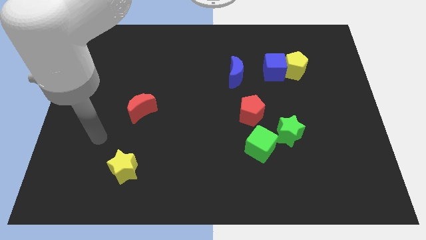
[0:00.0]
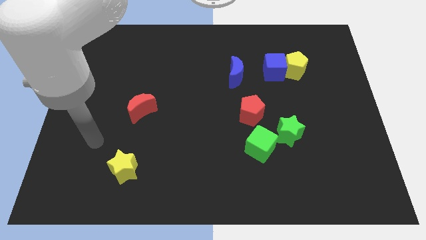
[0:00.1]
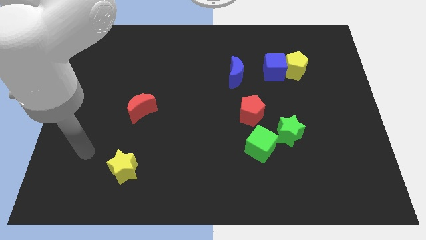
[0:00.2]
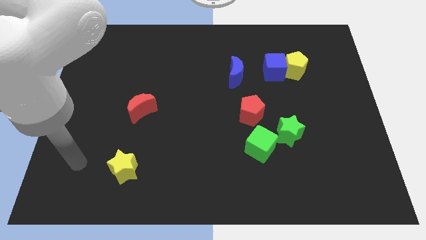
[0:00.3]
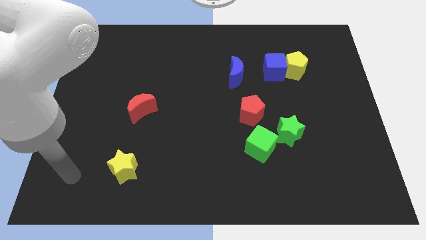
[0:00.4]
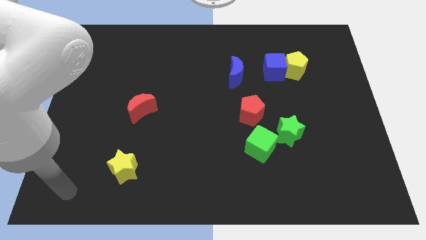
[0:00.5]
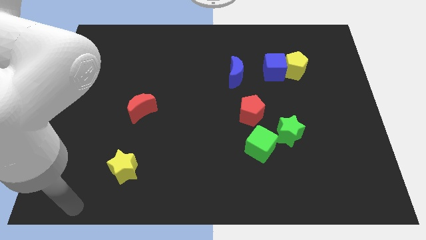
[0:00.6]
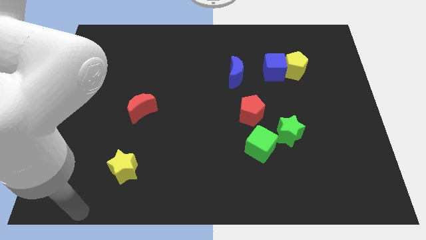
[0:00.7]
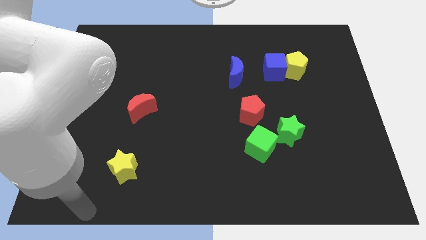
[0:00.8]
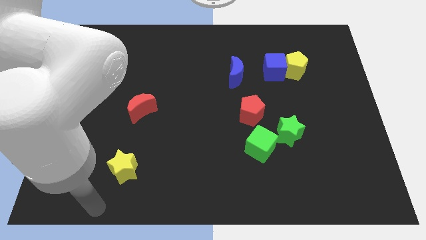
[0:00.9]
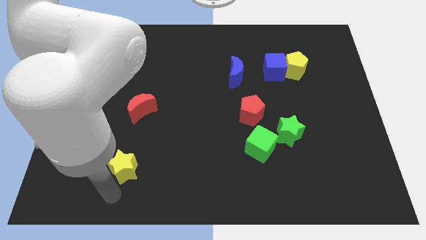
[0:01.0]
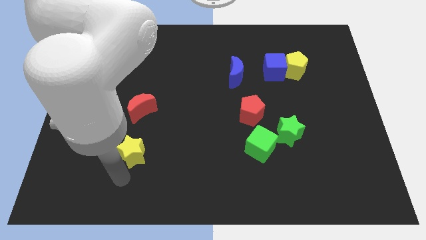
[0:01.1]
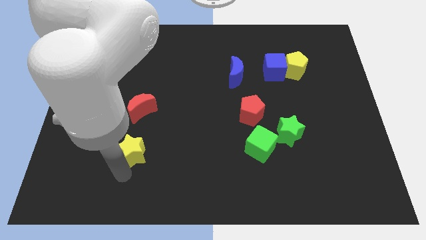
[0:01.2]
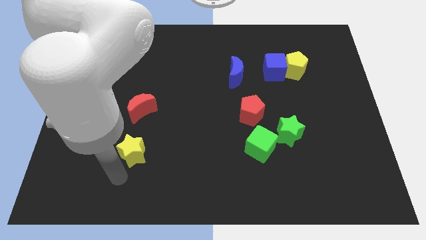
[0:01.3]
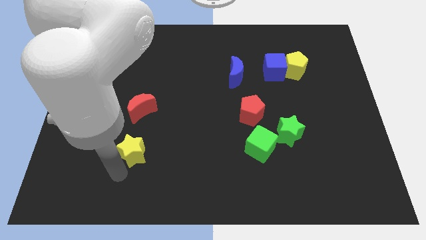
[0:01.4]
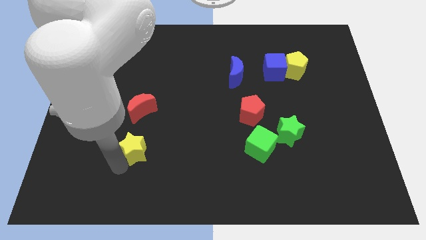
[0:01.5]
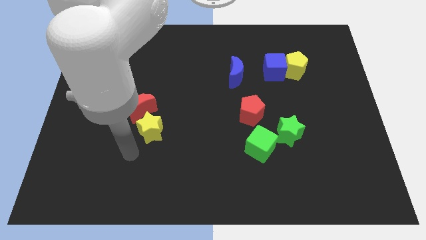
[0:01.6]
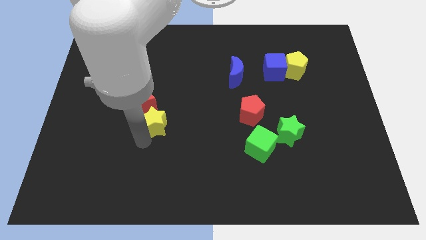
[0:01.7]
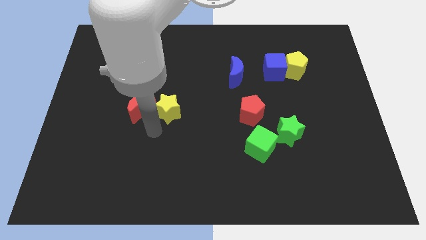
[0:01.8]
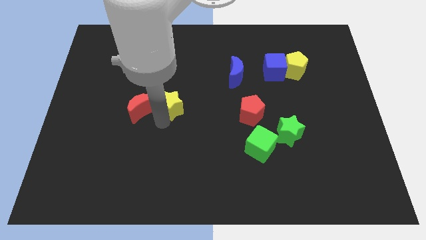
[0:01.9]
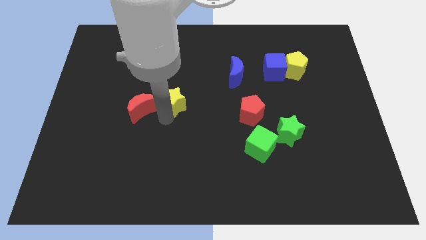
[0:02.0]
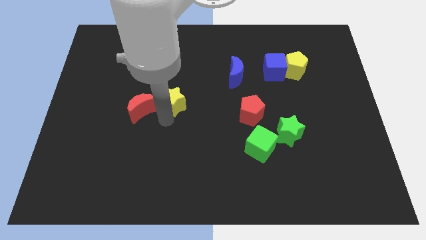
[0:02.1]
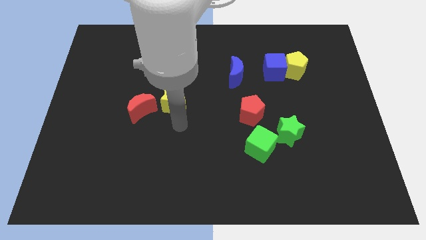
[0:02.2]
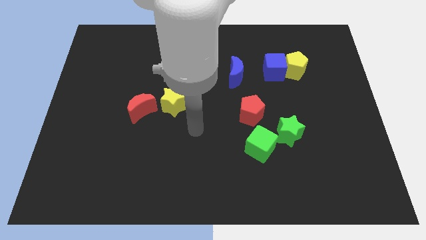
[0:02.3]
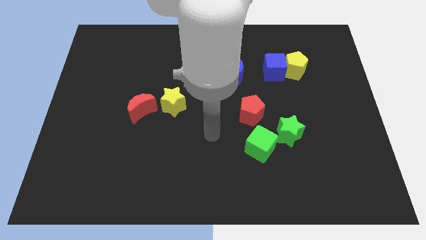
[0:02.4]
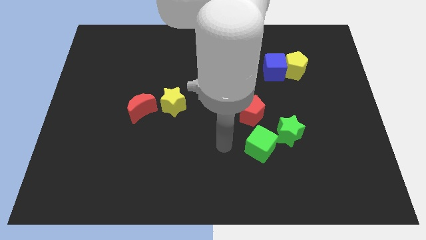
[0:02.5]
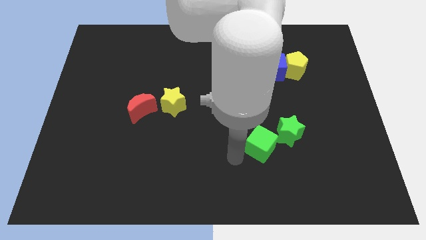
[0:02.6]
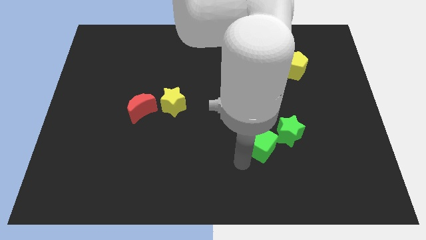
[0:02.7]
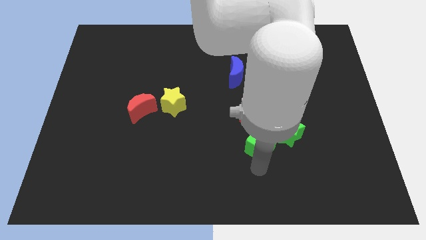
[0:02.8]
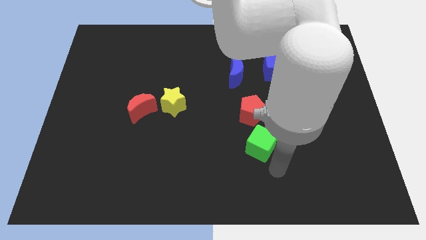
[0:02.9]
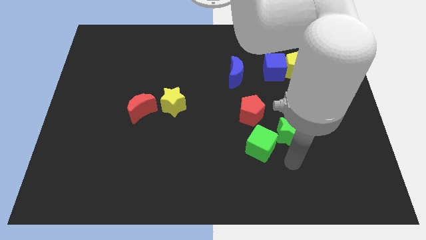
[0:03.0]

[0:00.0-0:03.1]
push the yellow star to the right side of the red crescent

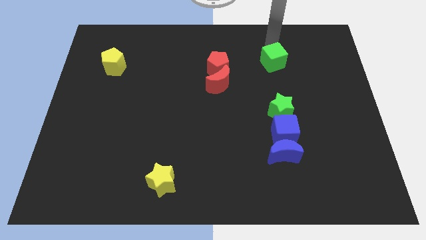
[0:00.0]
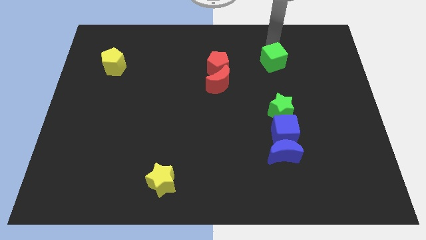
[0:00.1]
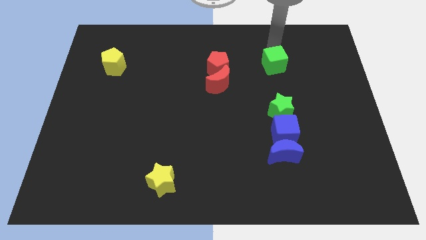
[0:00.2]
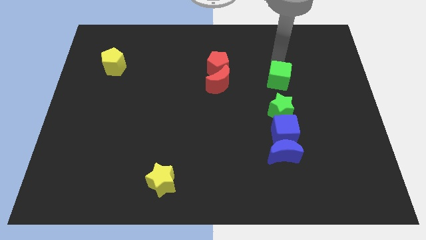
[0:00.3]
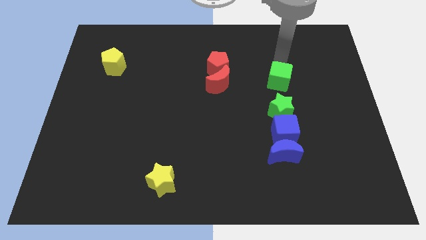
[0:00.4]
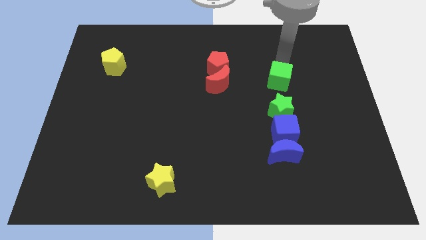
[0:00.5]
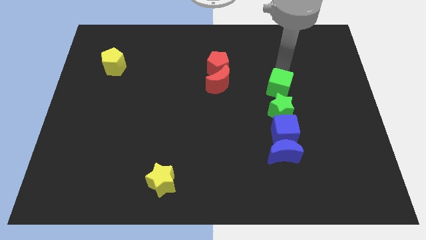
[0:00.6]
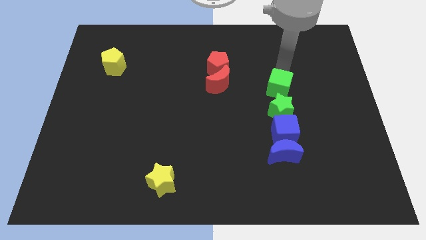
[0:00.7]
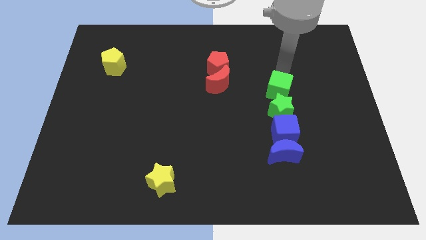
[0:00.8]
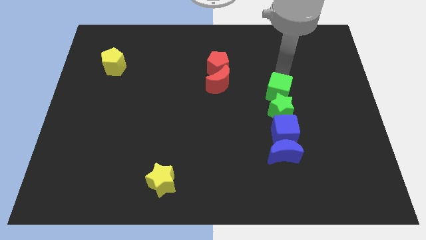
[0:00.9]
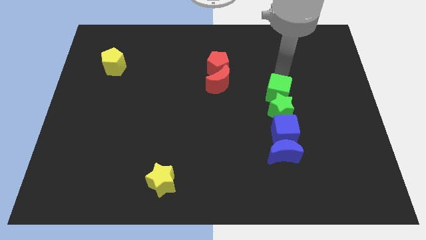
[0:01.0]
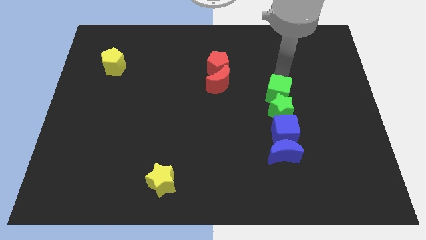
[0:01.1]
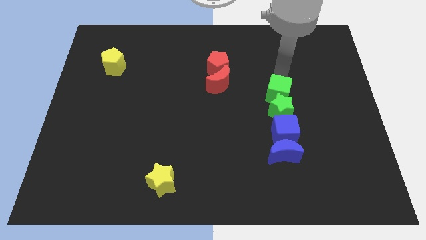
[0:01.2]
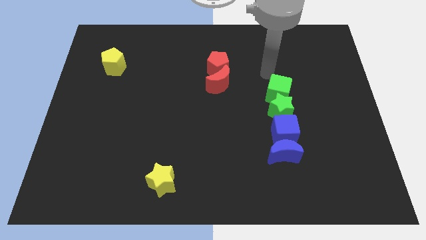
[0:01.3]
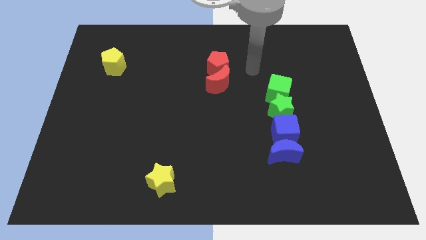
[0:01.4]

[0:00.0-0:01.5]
move the green cube above the green star

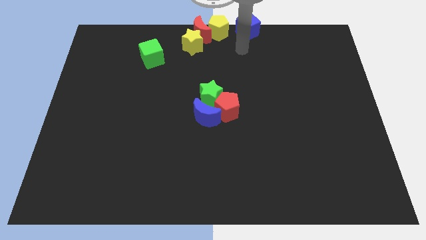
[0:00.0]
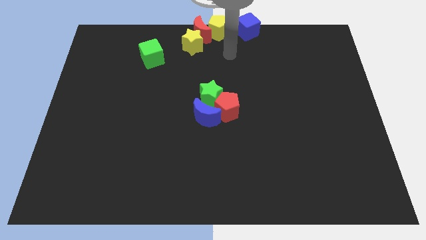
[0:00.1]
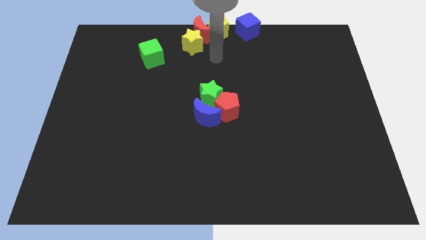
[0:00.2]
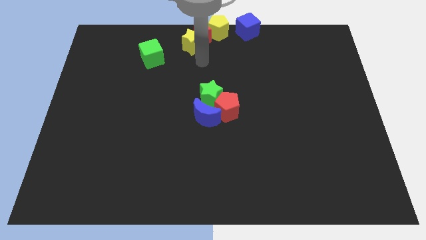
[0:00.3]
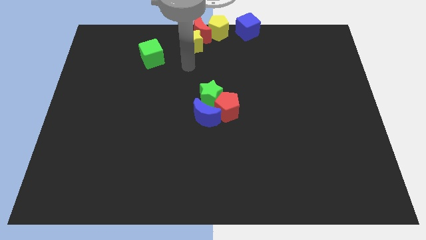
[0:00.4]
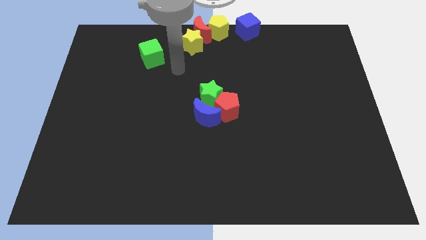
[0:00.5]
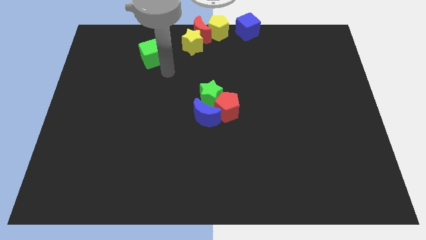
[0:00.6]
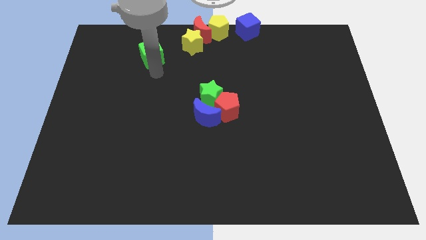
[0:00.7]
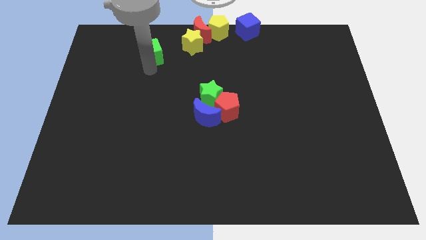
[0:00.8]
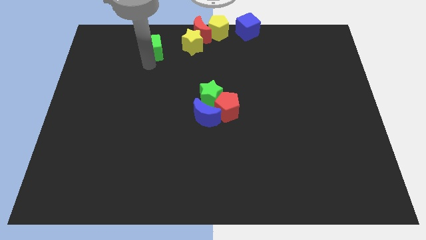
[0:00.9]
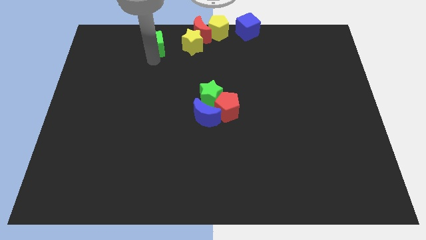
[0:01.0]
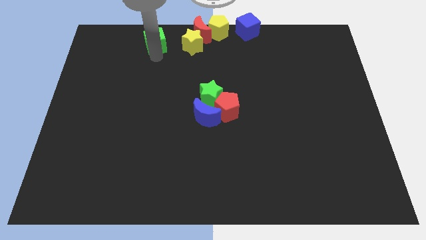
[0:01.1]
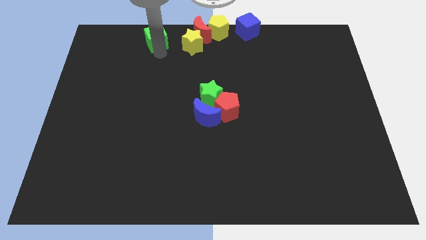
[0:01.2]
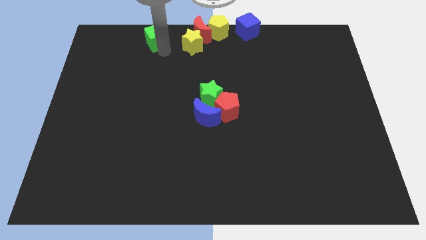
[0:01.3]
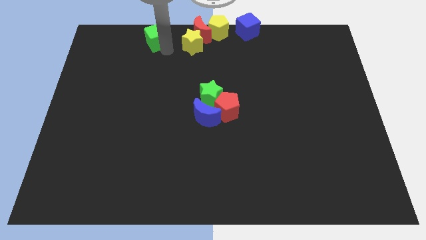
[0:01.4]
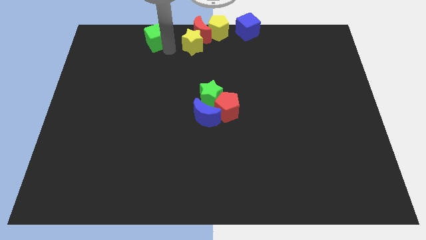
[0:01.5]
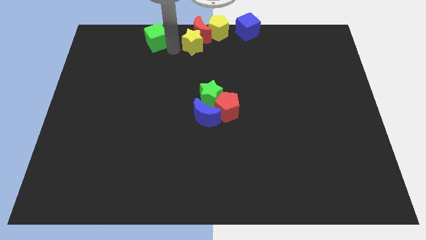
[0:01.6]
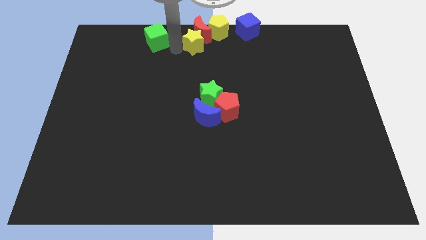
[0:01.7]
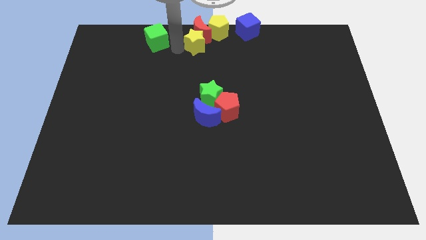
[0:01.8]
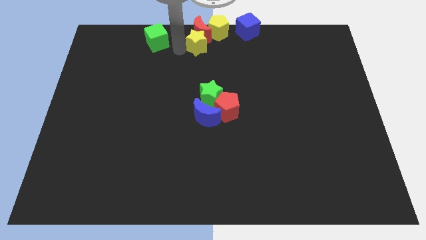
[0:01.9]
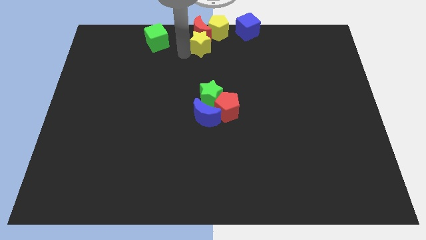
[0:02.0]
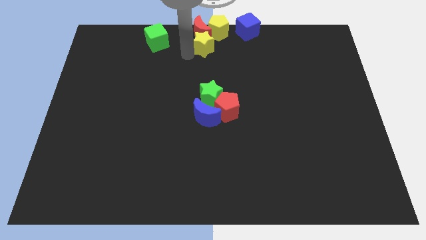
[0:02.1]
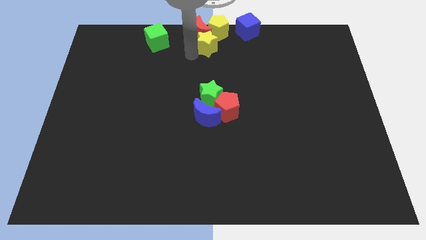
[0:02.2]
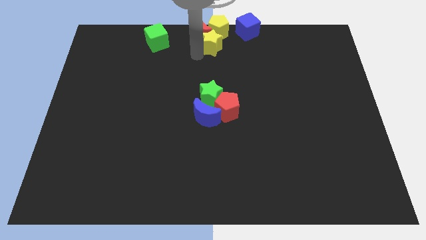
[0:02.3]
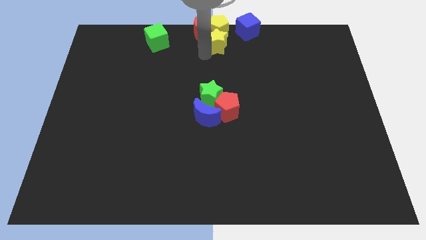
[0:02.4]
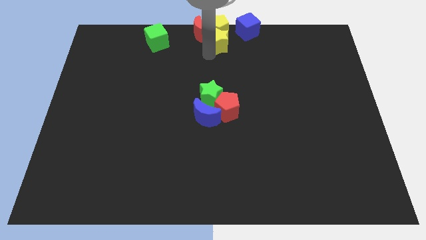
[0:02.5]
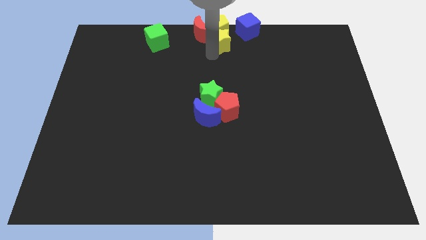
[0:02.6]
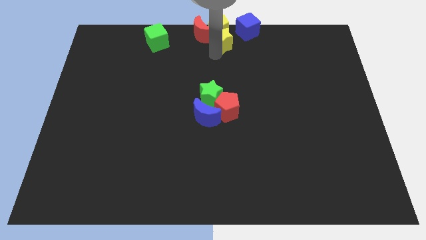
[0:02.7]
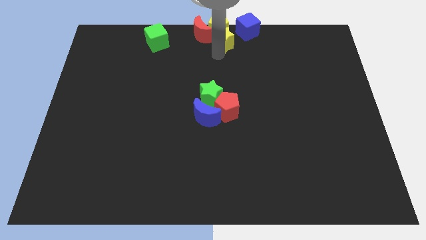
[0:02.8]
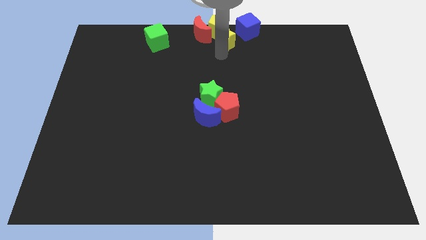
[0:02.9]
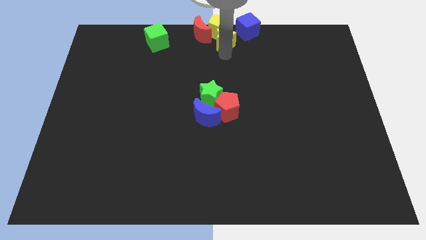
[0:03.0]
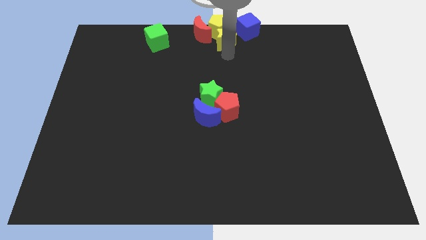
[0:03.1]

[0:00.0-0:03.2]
place yellow star below yellow pentagon

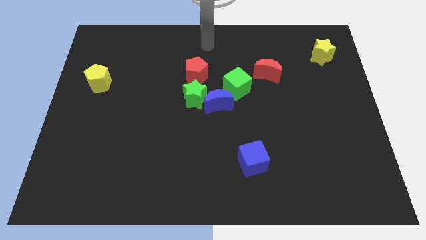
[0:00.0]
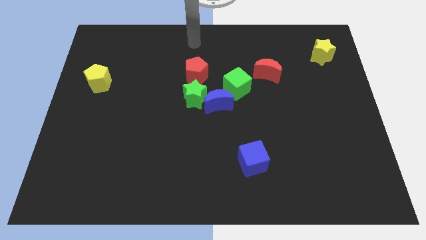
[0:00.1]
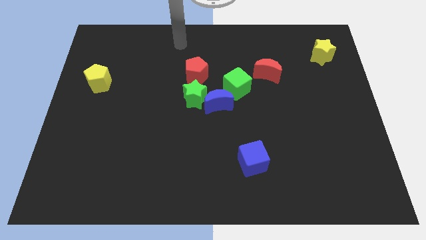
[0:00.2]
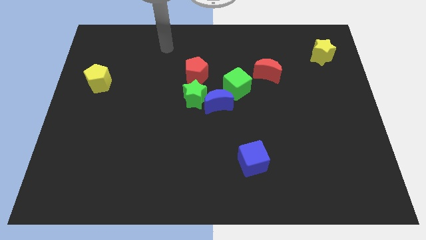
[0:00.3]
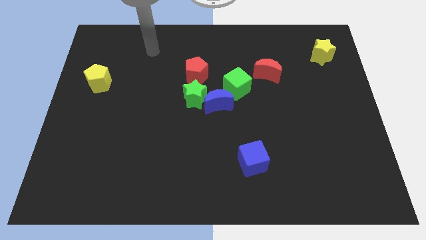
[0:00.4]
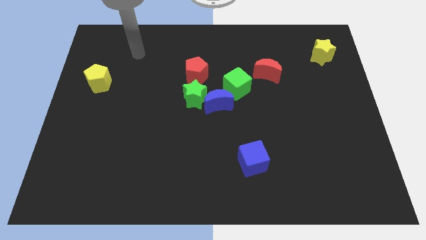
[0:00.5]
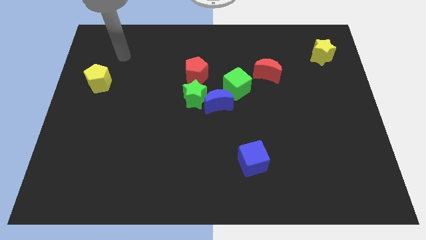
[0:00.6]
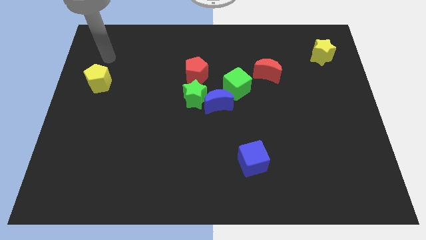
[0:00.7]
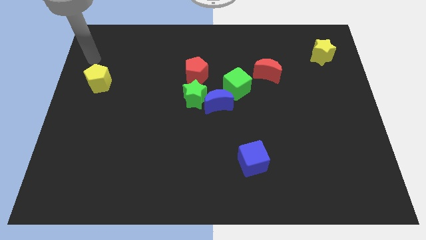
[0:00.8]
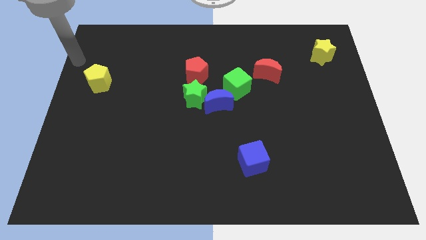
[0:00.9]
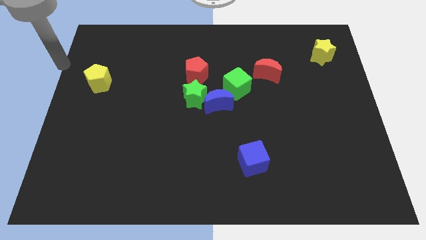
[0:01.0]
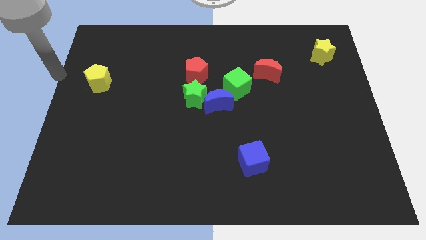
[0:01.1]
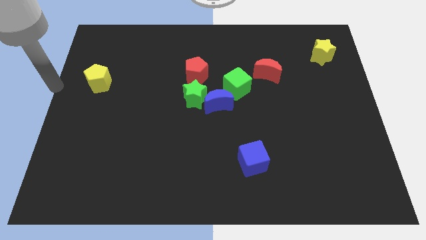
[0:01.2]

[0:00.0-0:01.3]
move your hand to the left side of the yellow pentagon
